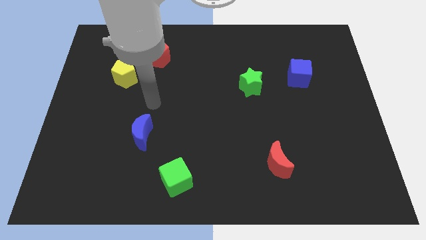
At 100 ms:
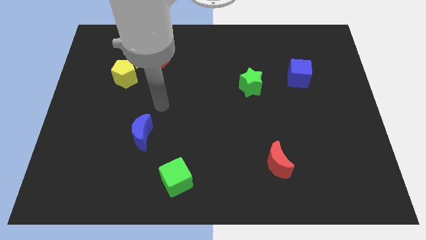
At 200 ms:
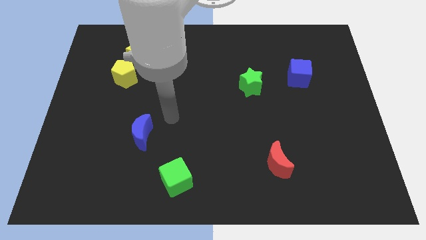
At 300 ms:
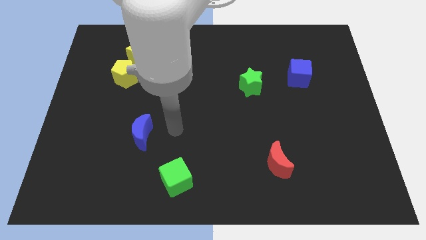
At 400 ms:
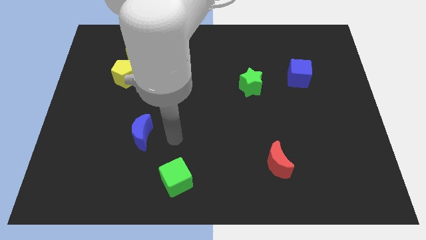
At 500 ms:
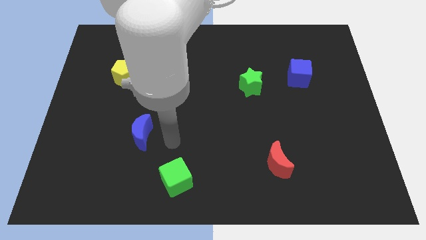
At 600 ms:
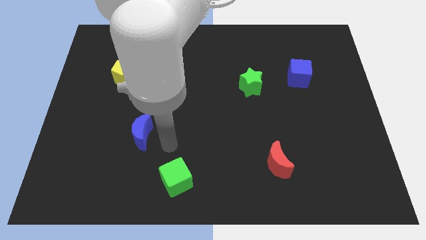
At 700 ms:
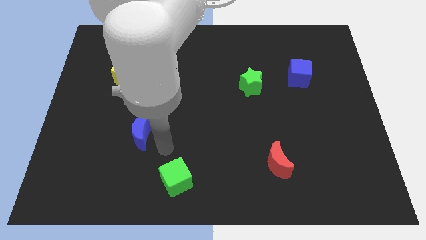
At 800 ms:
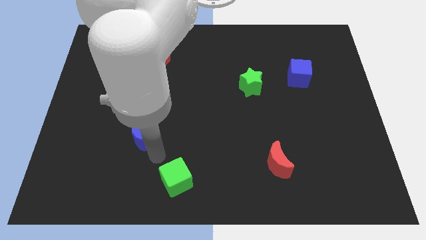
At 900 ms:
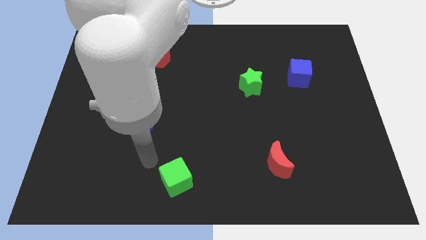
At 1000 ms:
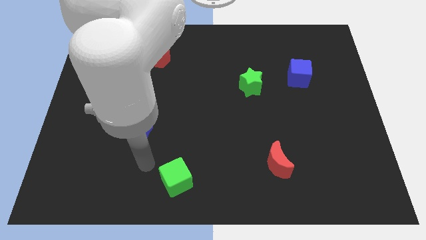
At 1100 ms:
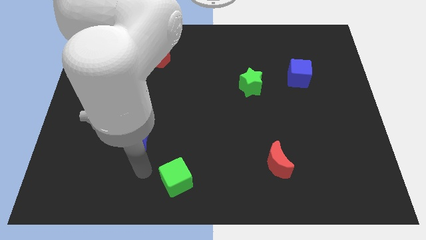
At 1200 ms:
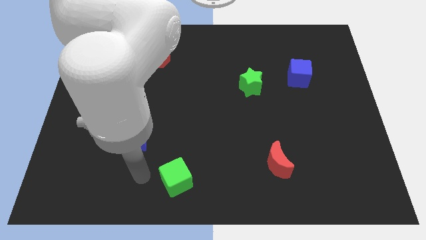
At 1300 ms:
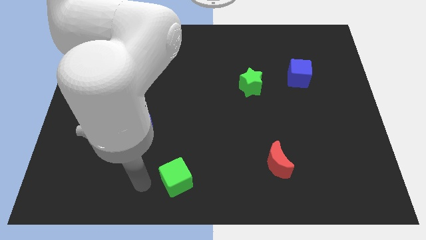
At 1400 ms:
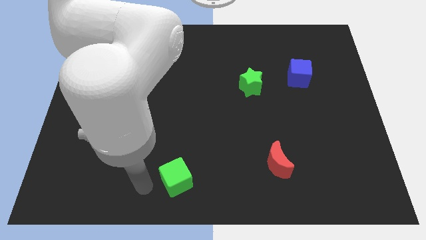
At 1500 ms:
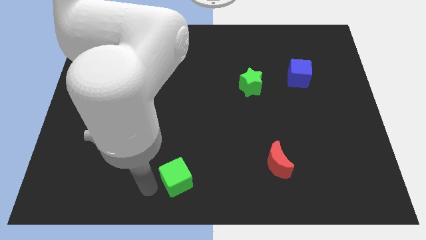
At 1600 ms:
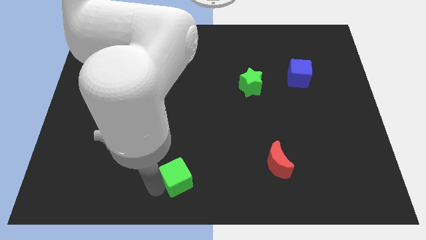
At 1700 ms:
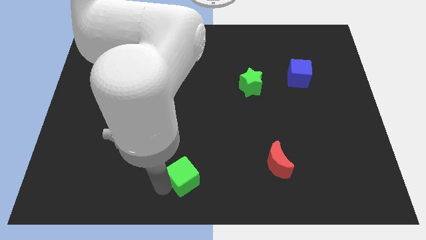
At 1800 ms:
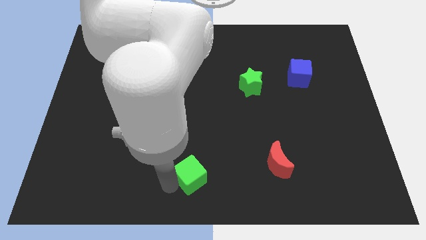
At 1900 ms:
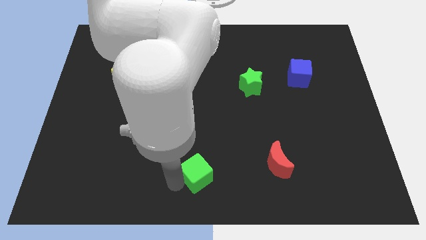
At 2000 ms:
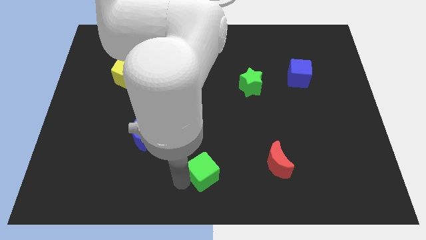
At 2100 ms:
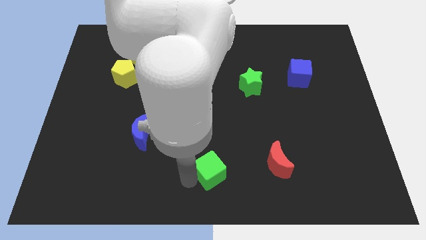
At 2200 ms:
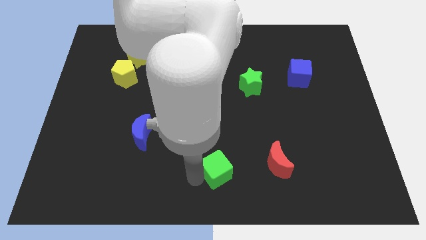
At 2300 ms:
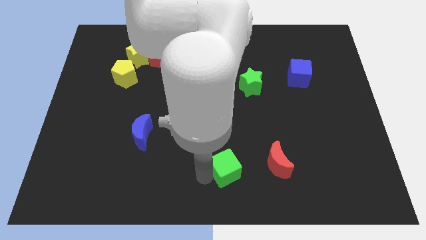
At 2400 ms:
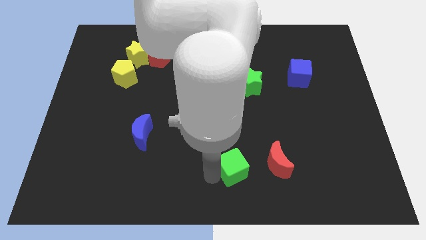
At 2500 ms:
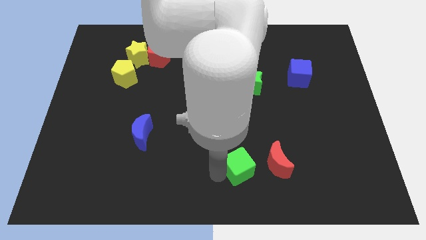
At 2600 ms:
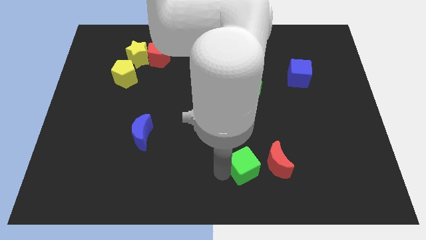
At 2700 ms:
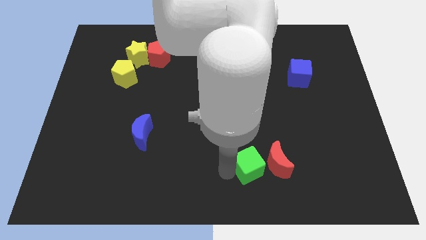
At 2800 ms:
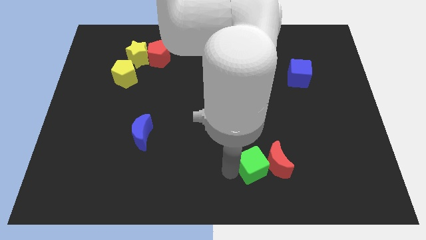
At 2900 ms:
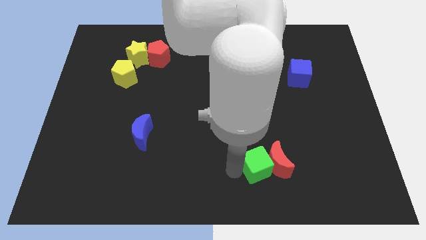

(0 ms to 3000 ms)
move the green cube close to the red moon

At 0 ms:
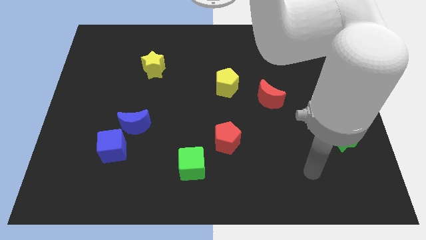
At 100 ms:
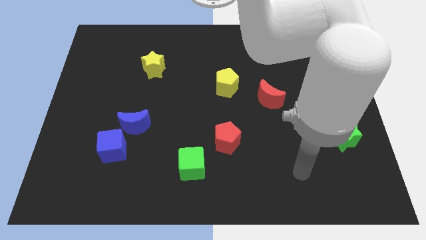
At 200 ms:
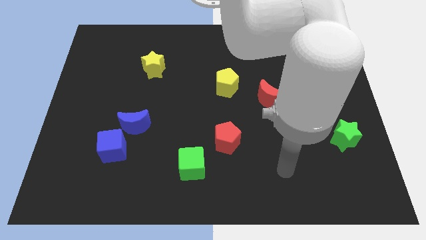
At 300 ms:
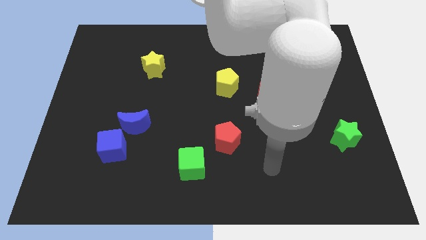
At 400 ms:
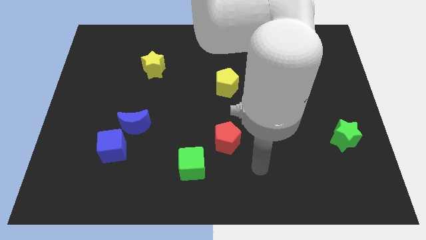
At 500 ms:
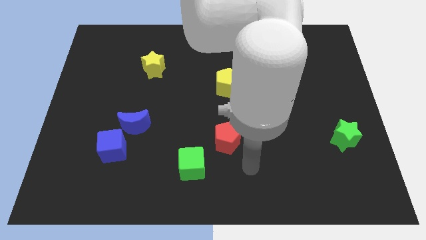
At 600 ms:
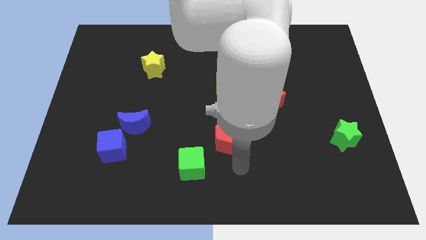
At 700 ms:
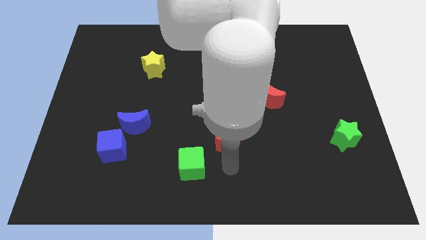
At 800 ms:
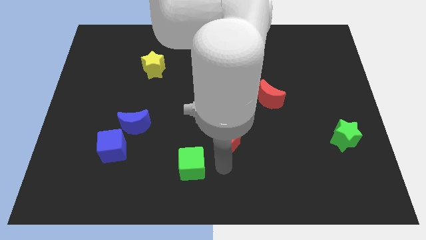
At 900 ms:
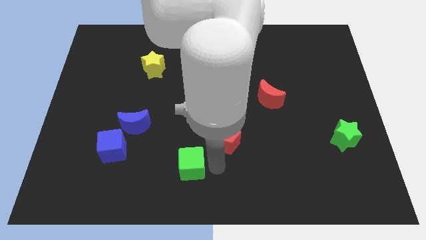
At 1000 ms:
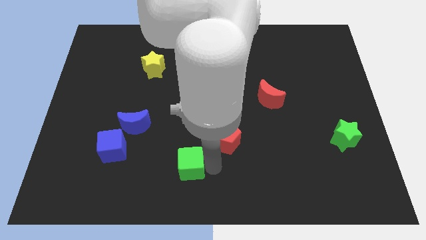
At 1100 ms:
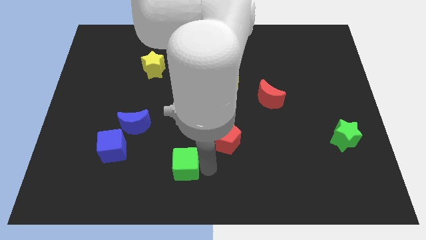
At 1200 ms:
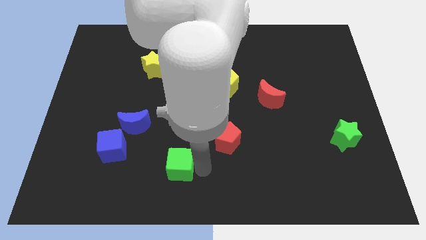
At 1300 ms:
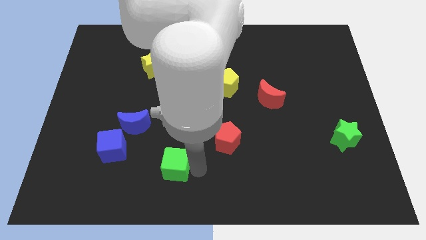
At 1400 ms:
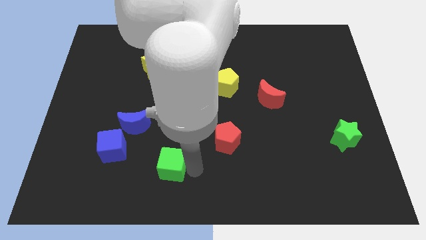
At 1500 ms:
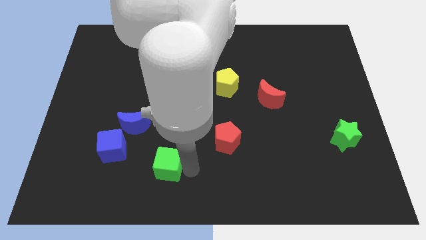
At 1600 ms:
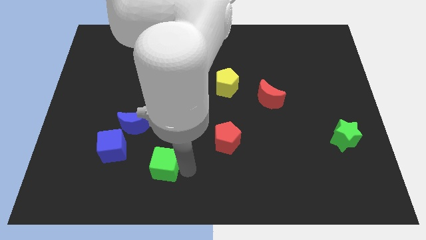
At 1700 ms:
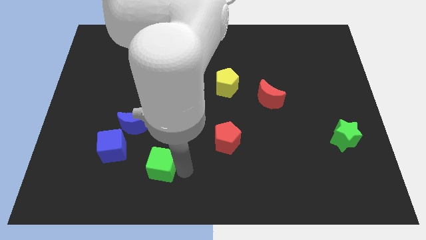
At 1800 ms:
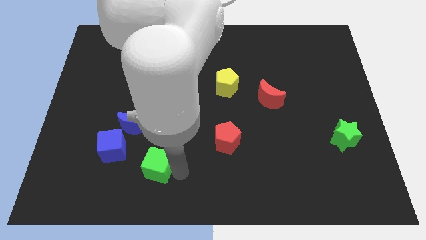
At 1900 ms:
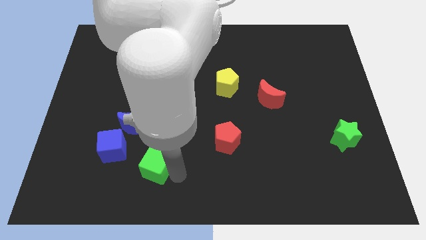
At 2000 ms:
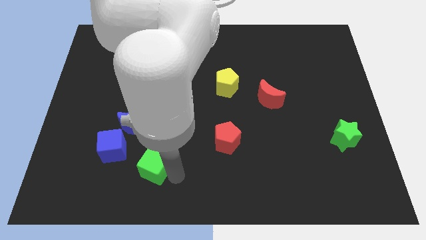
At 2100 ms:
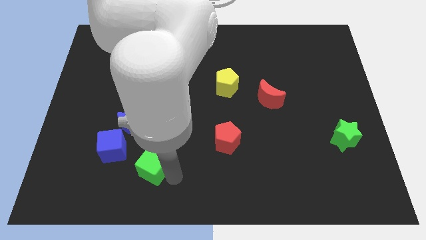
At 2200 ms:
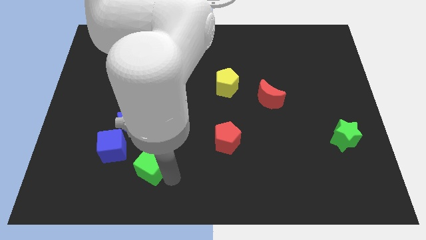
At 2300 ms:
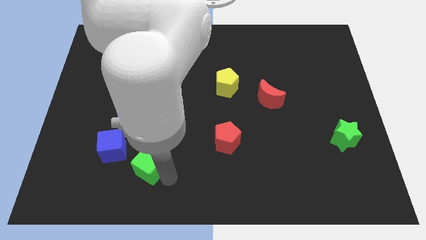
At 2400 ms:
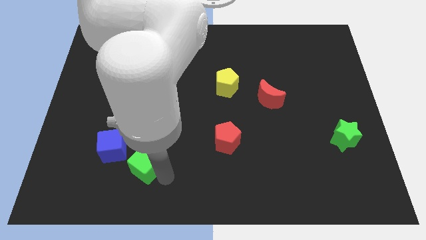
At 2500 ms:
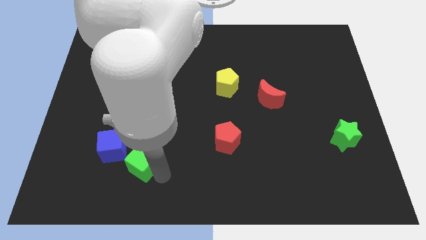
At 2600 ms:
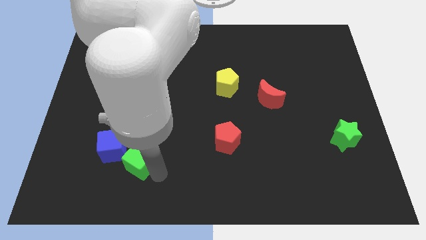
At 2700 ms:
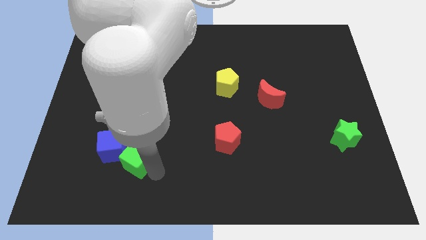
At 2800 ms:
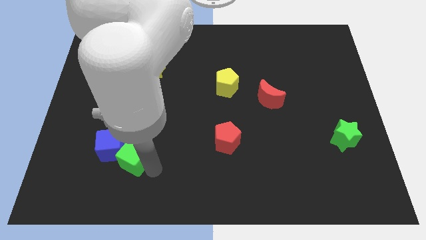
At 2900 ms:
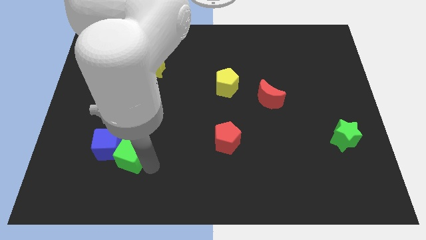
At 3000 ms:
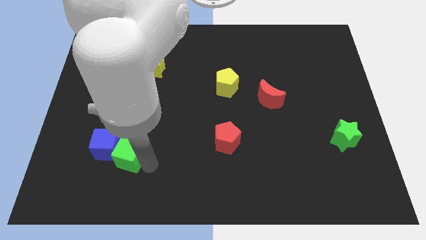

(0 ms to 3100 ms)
move the green cube next to the blue cube

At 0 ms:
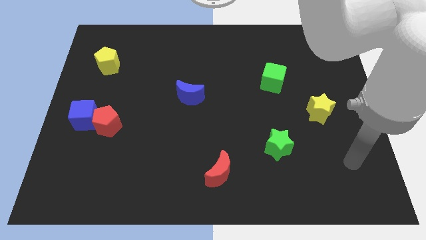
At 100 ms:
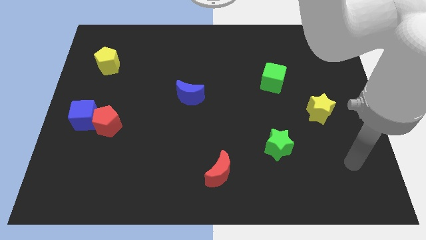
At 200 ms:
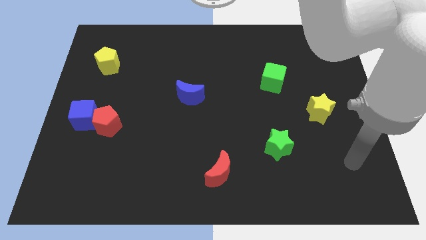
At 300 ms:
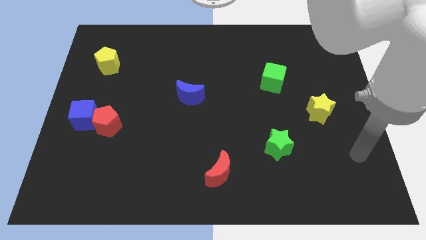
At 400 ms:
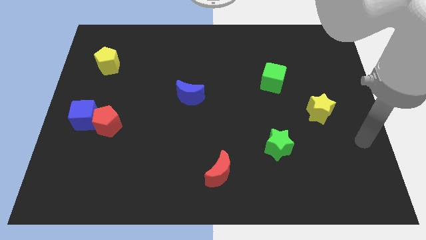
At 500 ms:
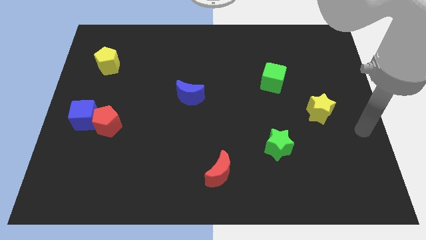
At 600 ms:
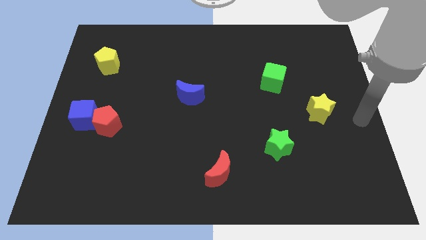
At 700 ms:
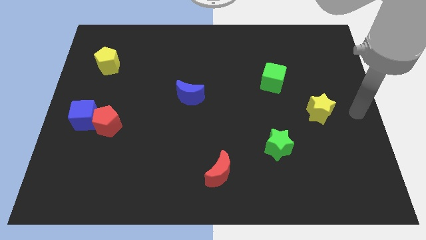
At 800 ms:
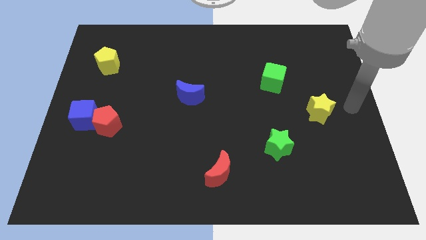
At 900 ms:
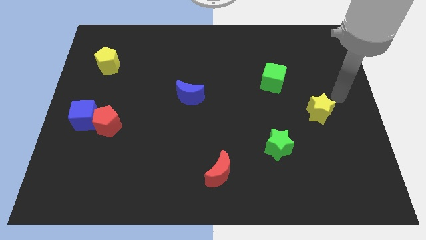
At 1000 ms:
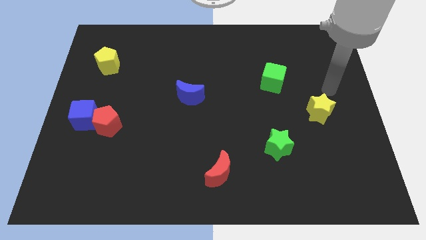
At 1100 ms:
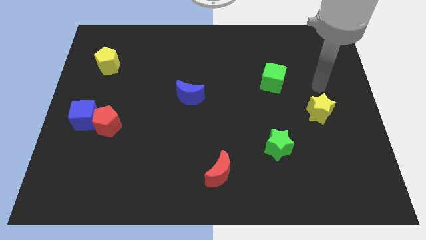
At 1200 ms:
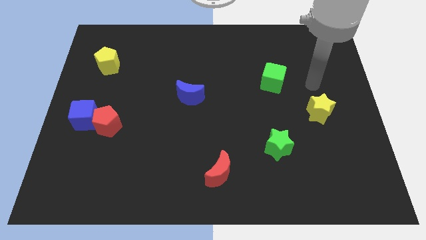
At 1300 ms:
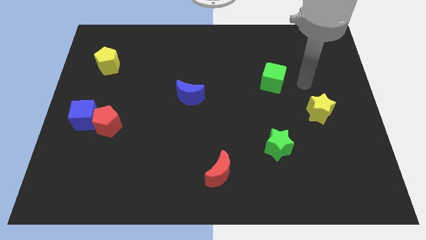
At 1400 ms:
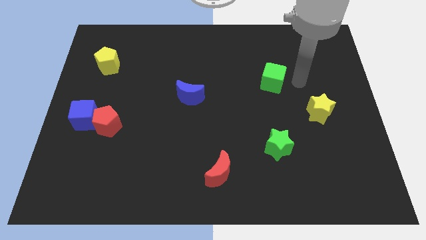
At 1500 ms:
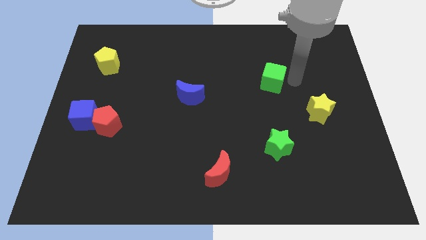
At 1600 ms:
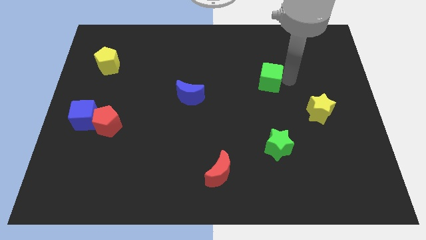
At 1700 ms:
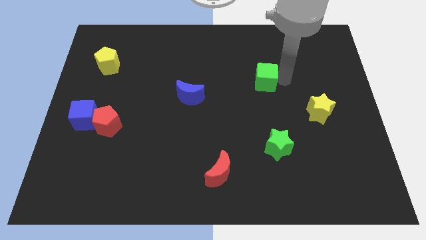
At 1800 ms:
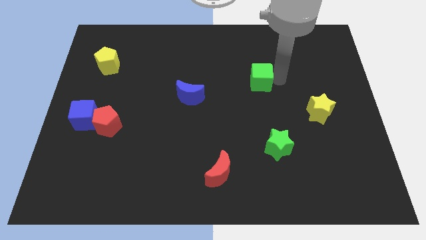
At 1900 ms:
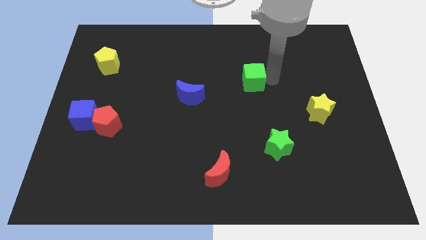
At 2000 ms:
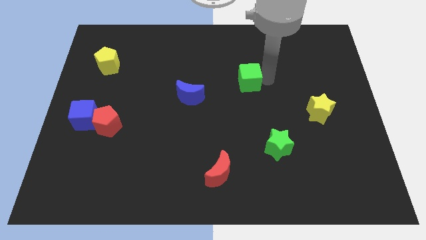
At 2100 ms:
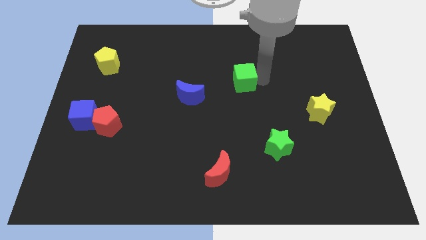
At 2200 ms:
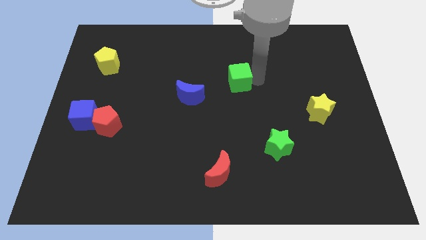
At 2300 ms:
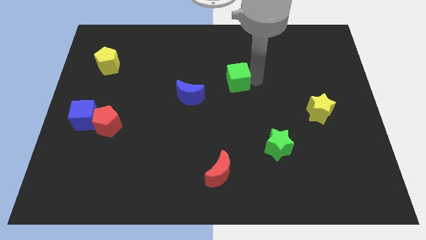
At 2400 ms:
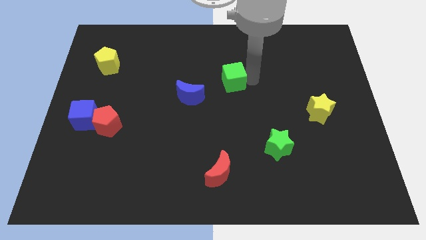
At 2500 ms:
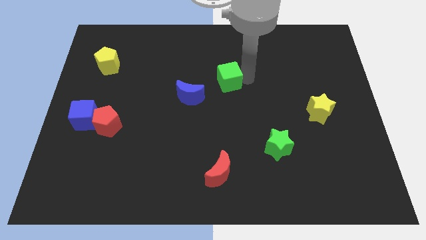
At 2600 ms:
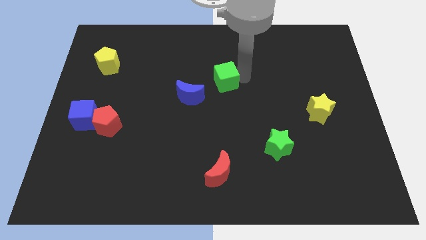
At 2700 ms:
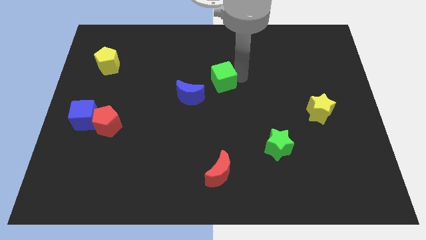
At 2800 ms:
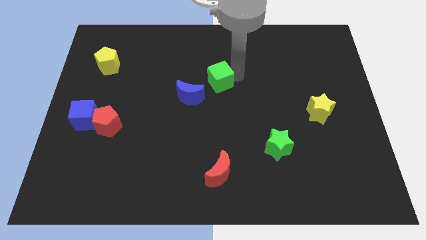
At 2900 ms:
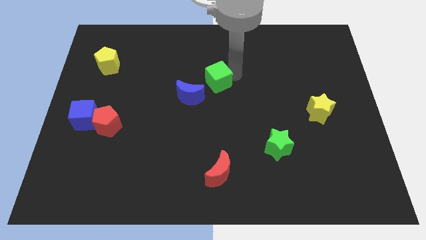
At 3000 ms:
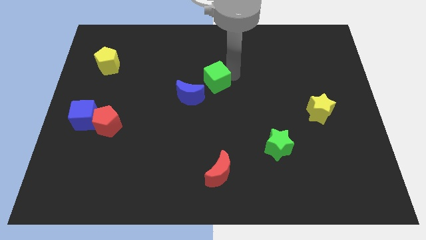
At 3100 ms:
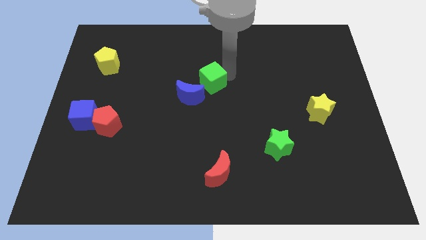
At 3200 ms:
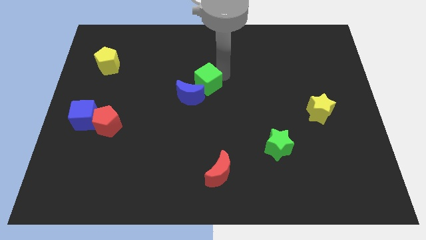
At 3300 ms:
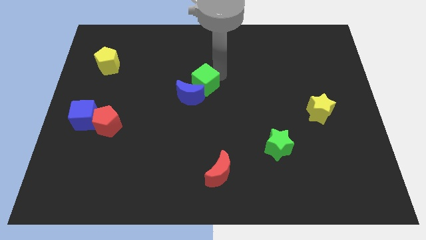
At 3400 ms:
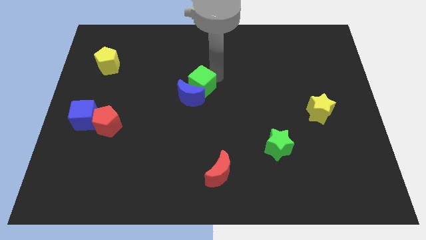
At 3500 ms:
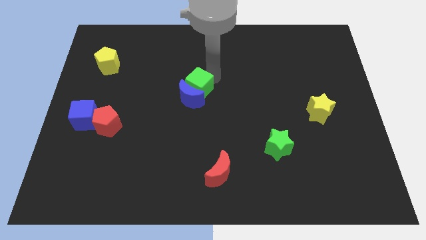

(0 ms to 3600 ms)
push the green cube towards the blue moon
